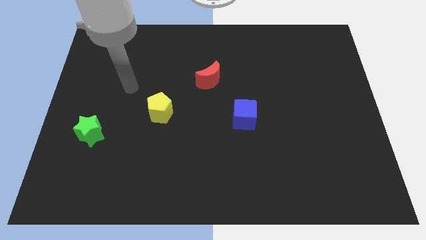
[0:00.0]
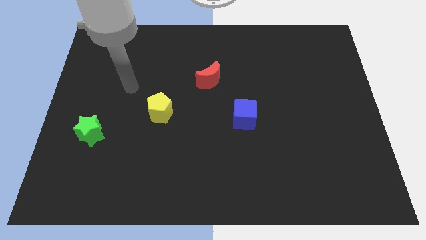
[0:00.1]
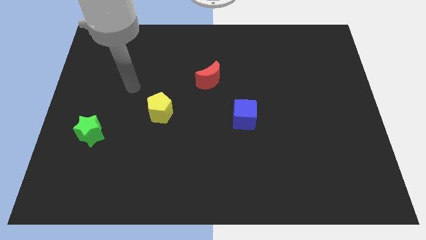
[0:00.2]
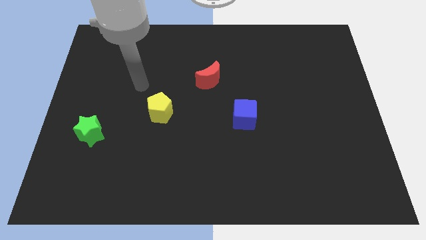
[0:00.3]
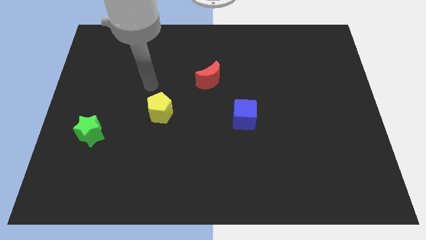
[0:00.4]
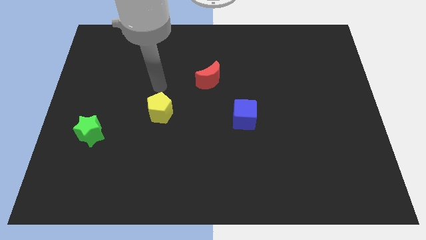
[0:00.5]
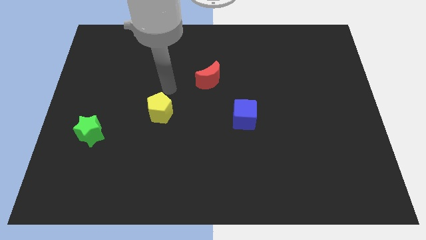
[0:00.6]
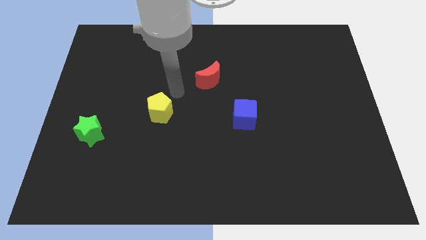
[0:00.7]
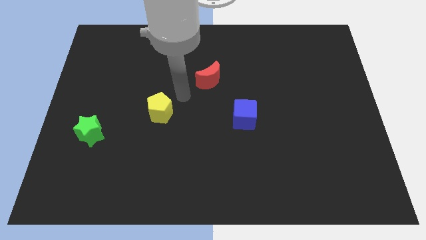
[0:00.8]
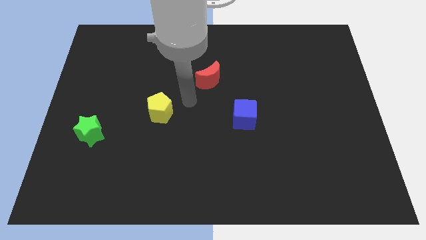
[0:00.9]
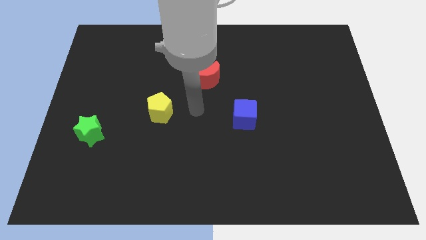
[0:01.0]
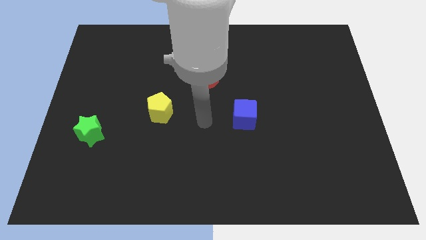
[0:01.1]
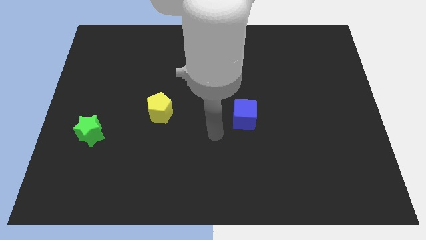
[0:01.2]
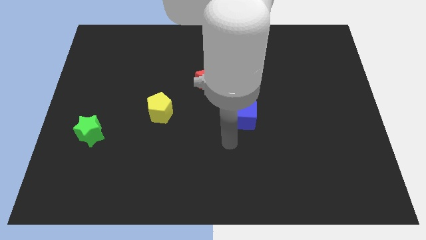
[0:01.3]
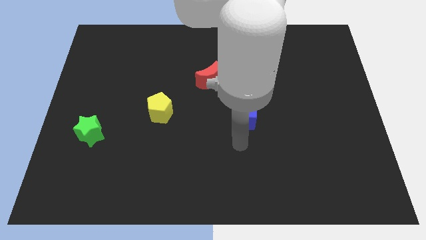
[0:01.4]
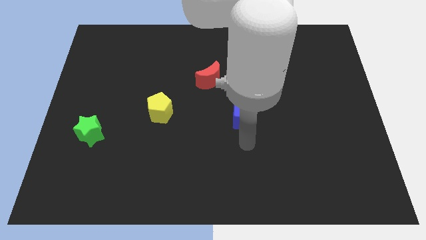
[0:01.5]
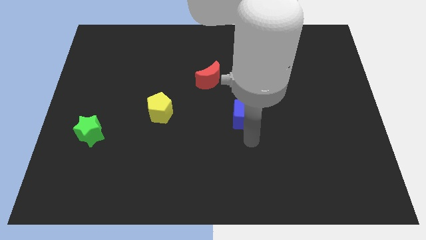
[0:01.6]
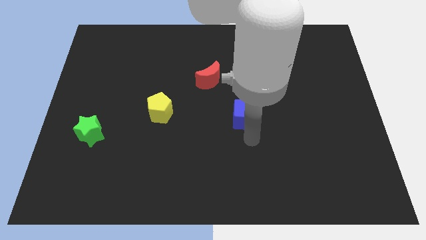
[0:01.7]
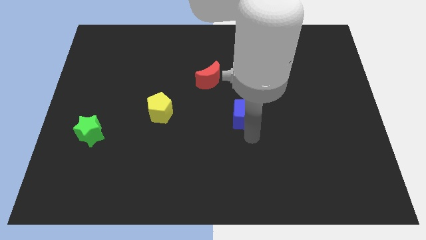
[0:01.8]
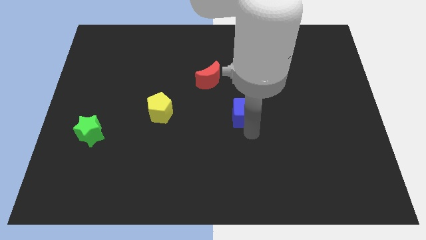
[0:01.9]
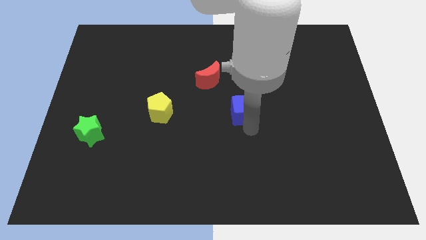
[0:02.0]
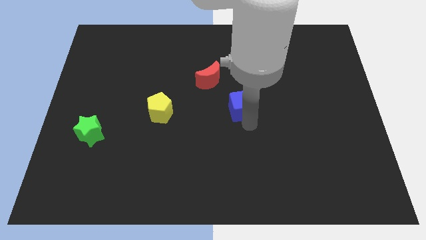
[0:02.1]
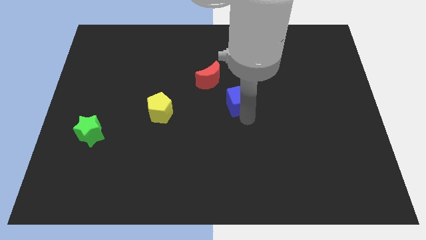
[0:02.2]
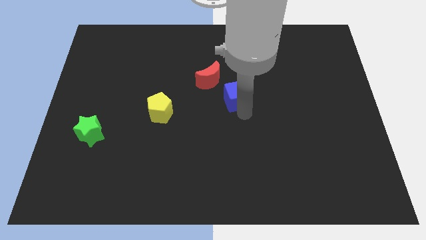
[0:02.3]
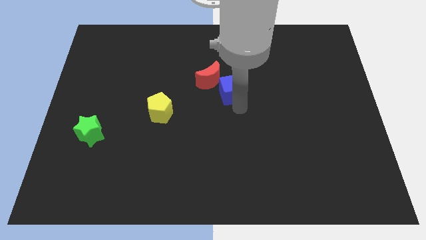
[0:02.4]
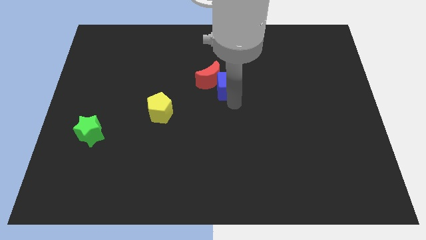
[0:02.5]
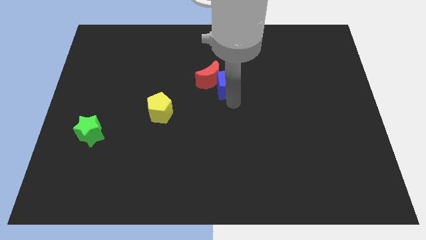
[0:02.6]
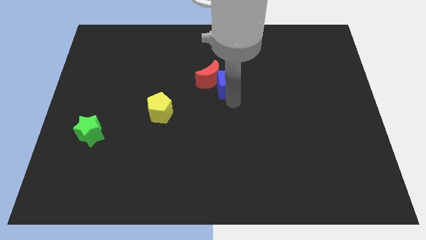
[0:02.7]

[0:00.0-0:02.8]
slide the blue cube close to the moon

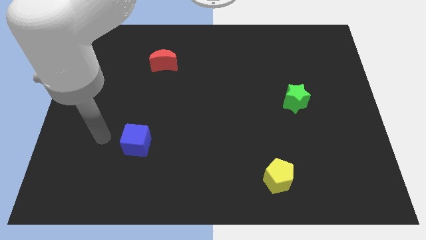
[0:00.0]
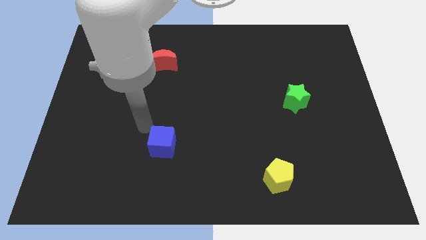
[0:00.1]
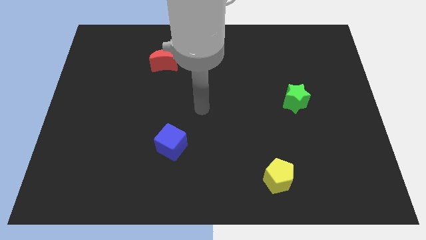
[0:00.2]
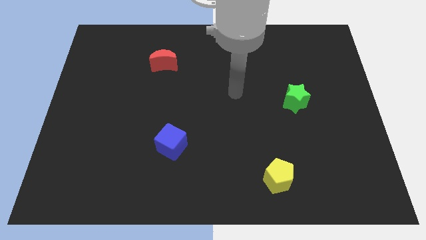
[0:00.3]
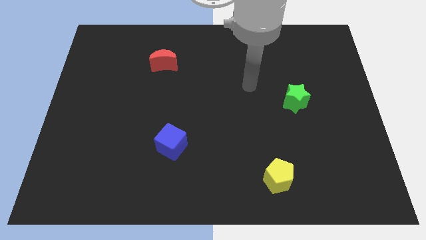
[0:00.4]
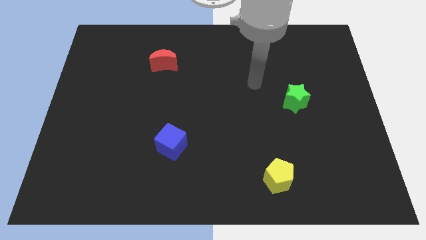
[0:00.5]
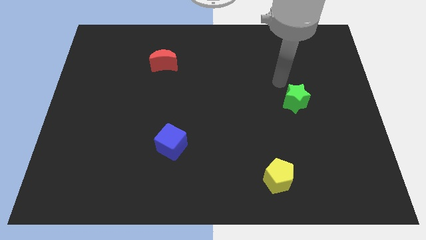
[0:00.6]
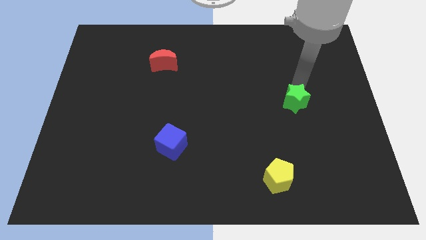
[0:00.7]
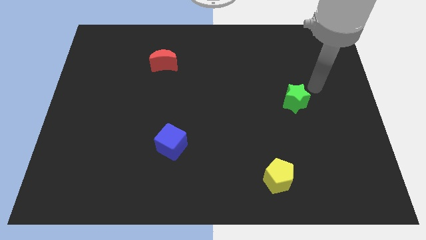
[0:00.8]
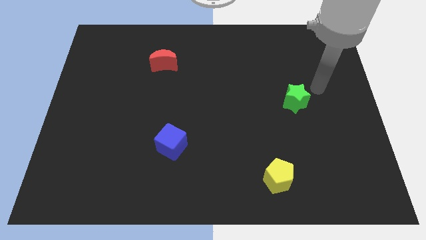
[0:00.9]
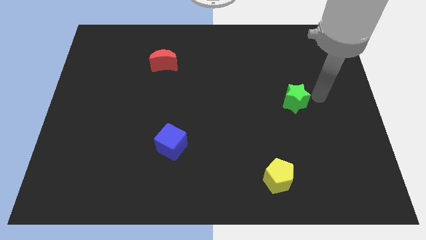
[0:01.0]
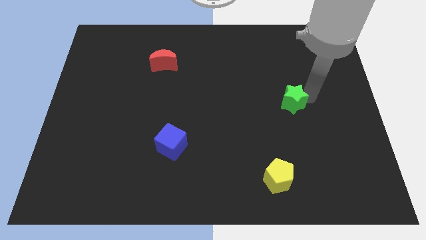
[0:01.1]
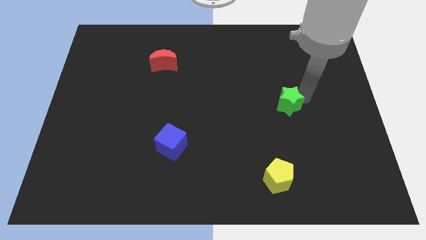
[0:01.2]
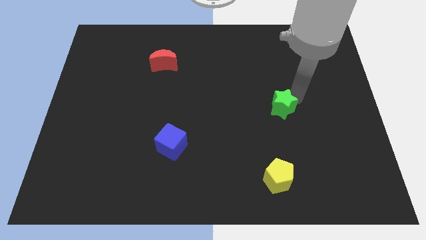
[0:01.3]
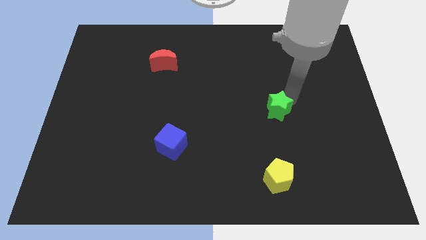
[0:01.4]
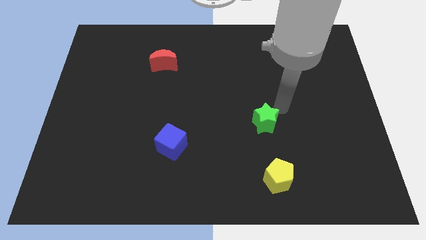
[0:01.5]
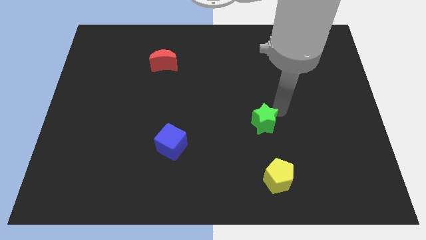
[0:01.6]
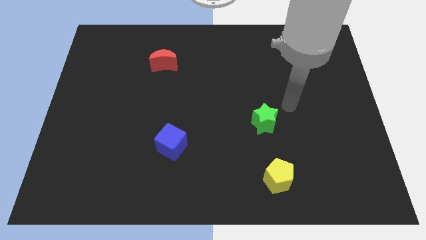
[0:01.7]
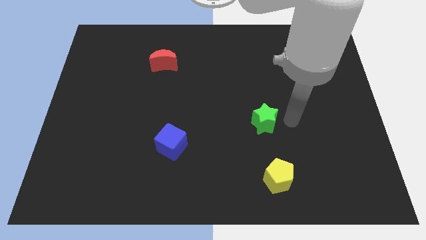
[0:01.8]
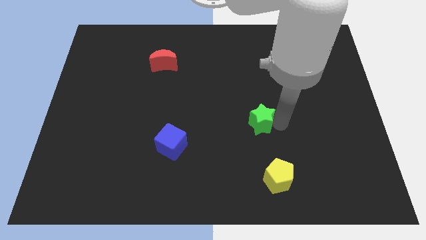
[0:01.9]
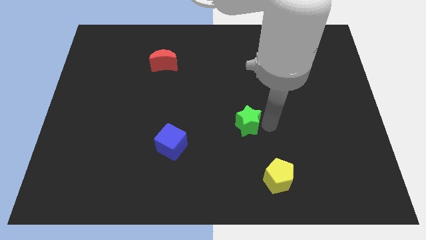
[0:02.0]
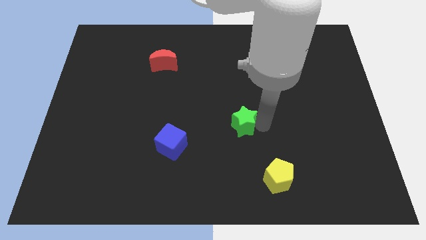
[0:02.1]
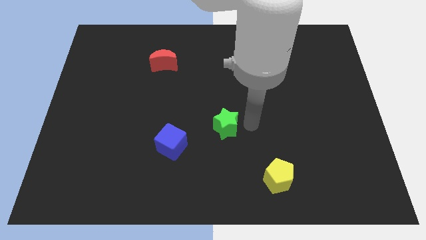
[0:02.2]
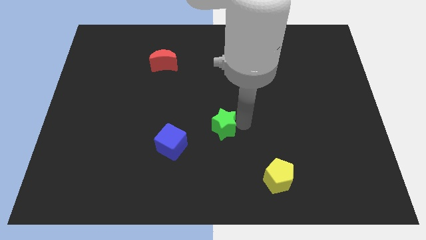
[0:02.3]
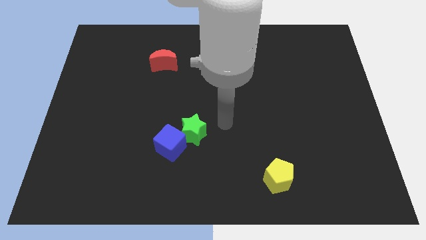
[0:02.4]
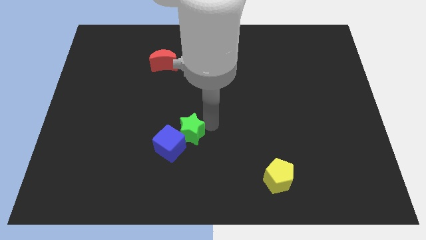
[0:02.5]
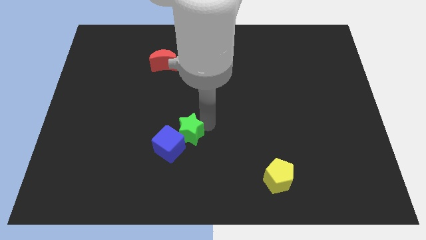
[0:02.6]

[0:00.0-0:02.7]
move the green star close to the blue block

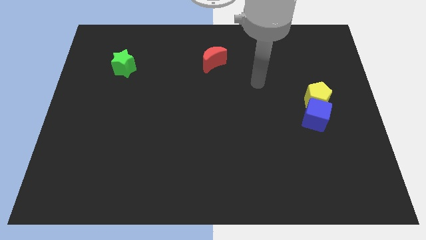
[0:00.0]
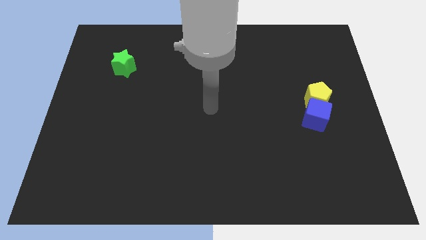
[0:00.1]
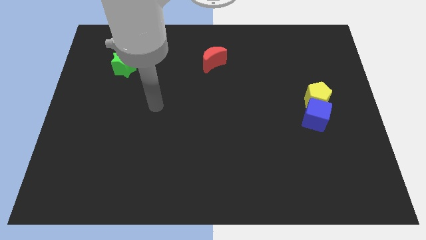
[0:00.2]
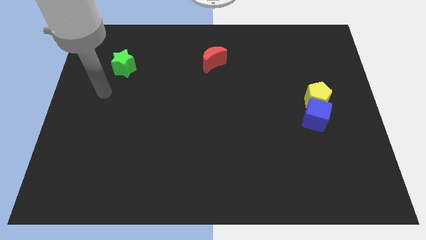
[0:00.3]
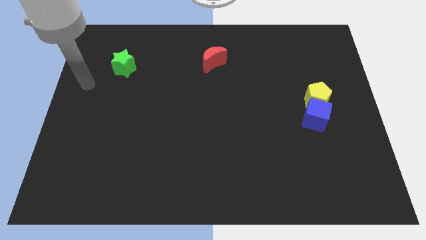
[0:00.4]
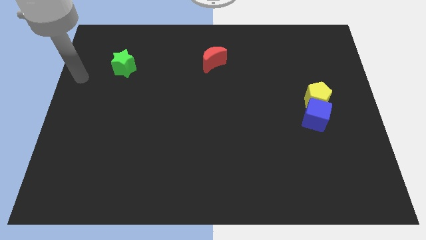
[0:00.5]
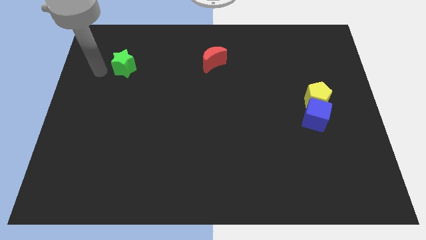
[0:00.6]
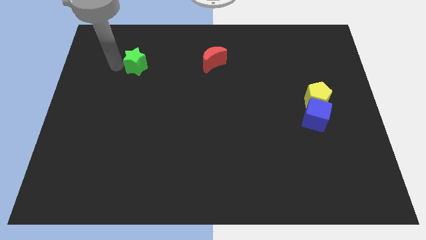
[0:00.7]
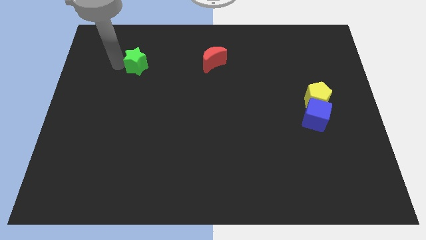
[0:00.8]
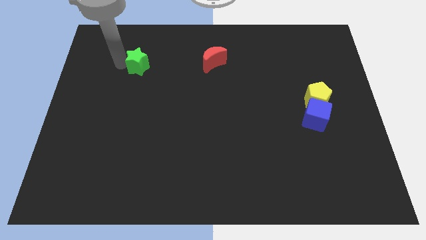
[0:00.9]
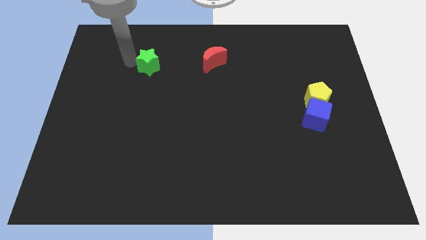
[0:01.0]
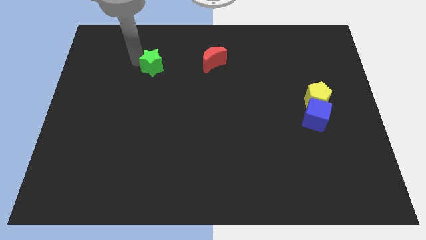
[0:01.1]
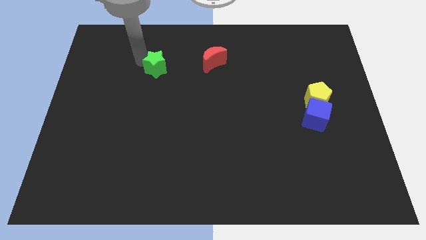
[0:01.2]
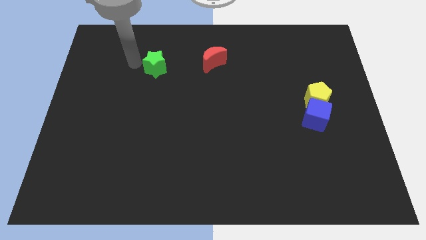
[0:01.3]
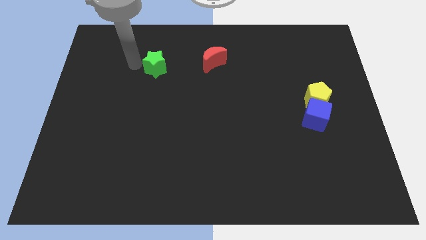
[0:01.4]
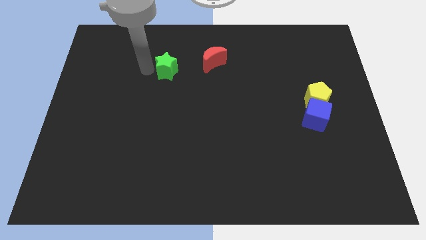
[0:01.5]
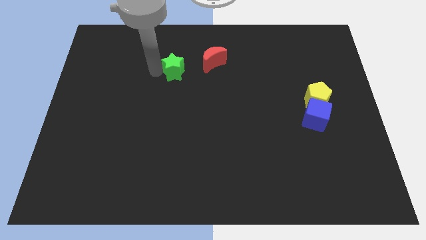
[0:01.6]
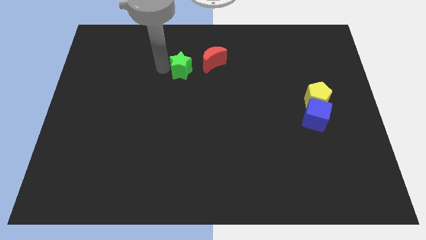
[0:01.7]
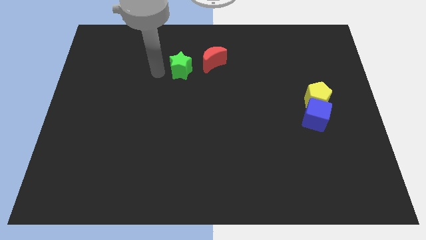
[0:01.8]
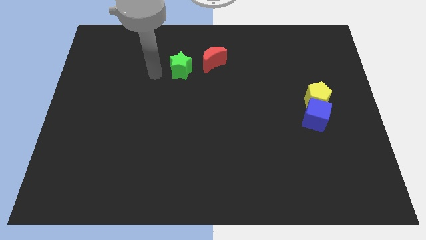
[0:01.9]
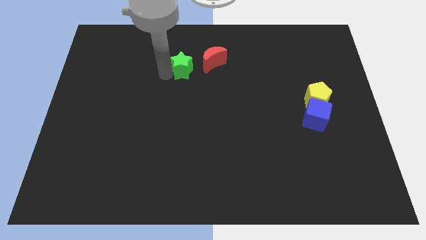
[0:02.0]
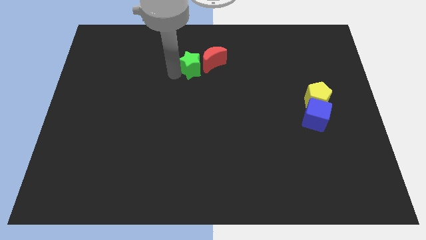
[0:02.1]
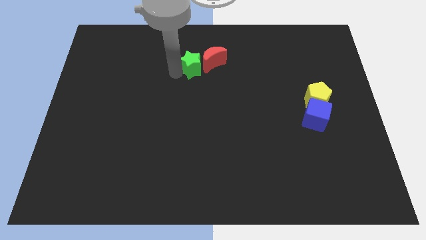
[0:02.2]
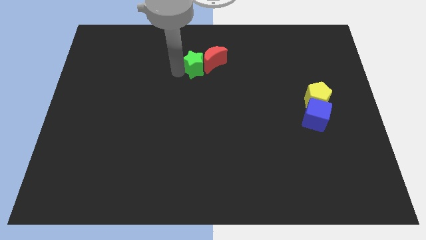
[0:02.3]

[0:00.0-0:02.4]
move the green star to the red block
